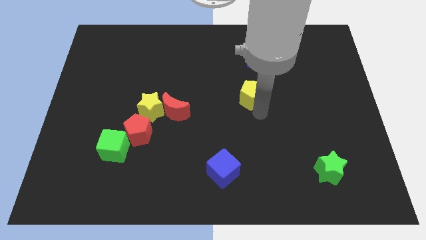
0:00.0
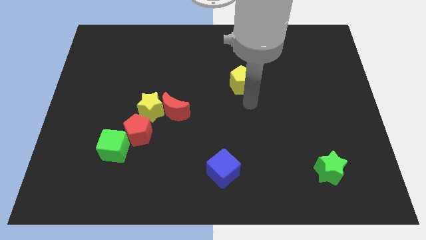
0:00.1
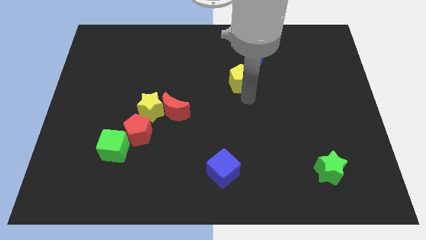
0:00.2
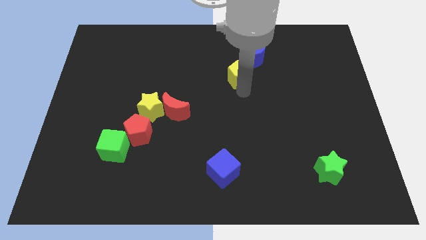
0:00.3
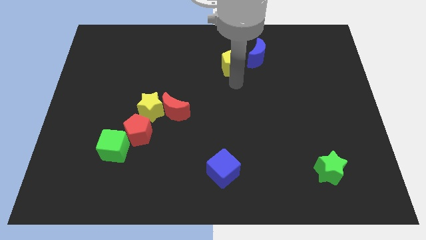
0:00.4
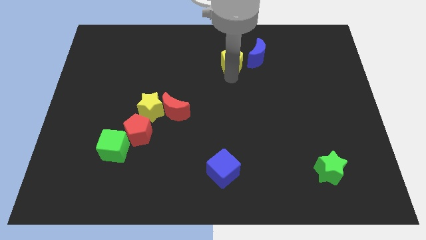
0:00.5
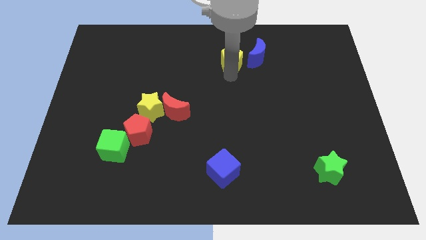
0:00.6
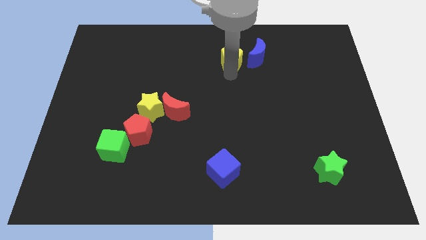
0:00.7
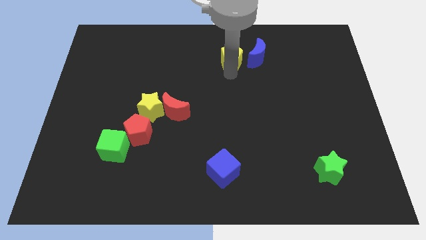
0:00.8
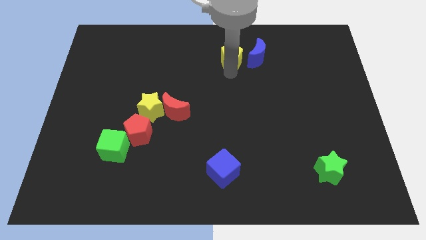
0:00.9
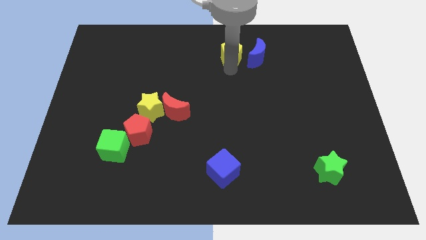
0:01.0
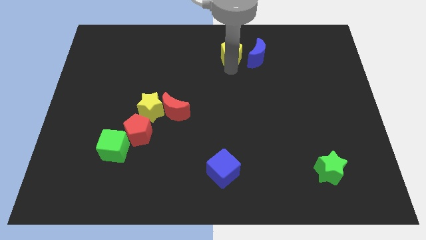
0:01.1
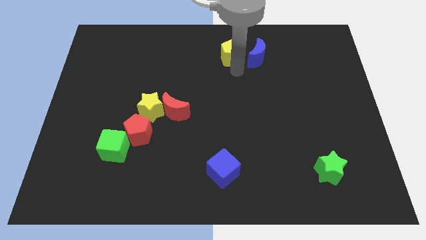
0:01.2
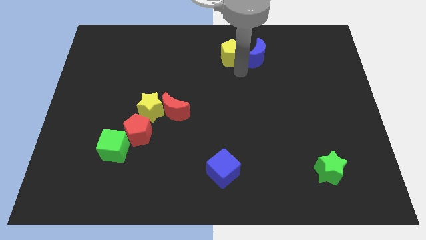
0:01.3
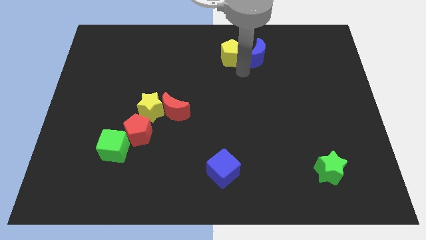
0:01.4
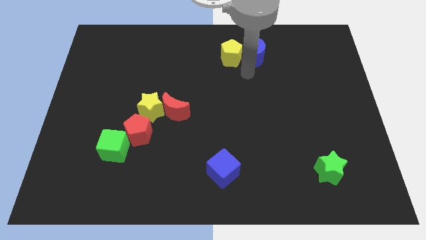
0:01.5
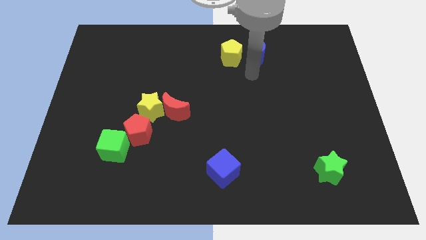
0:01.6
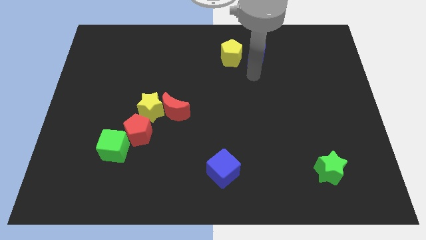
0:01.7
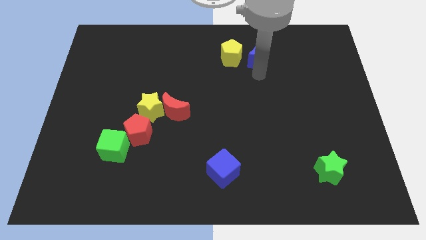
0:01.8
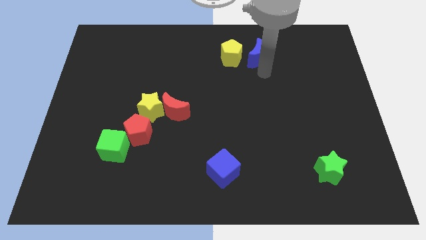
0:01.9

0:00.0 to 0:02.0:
move the yellow pentagon towards the top center of the board

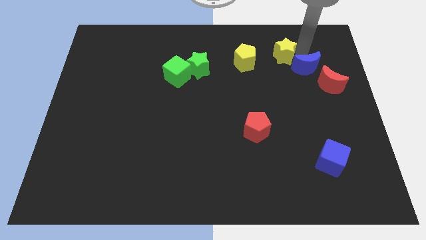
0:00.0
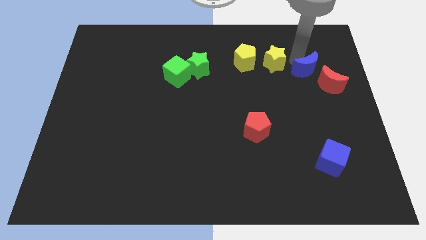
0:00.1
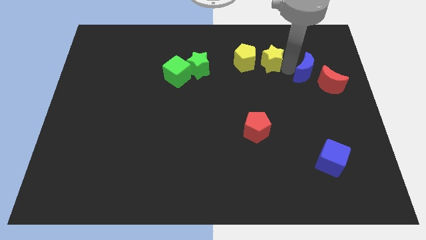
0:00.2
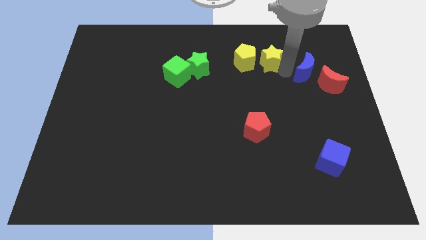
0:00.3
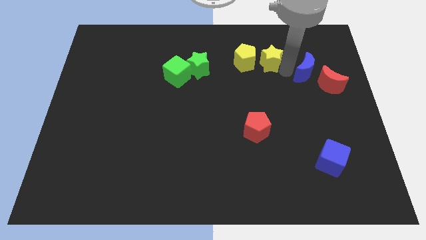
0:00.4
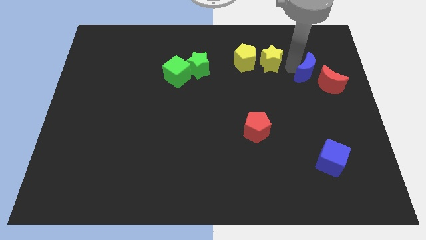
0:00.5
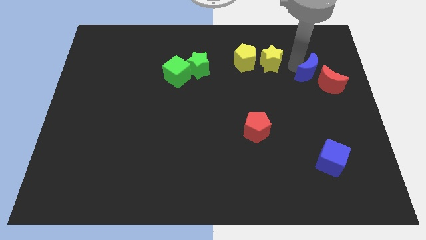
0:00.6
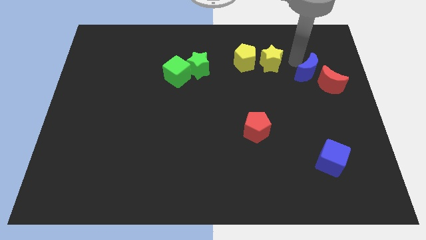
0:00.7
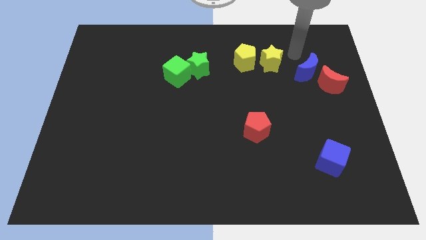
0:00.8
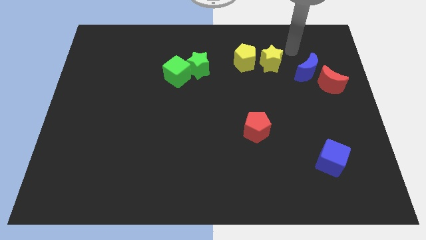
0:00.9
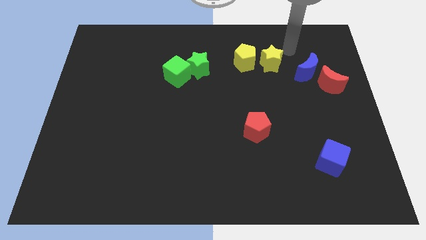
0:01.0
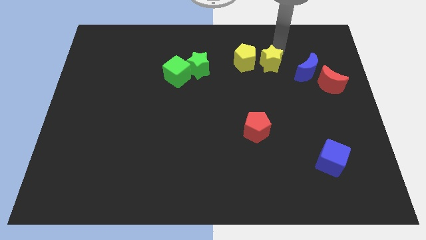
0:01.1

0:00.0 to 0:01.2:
separate yellow star and blue moon

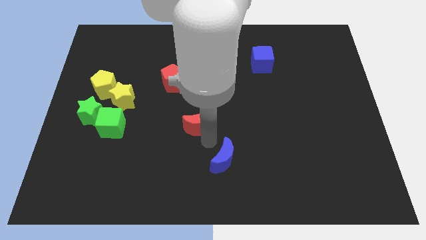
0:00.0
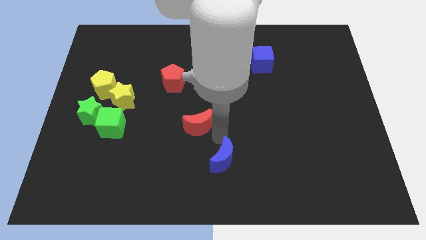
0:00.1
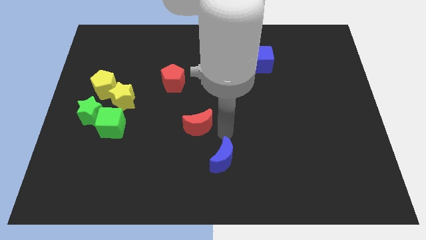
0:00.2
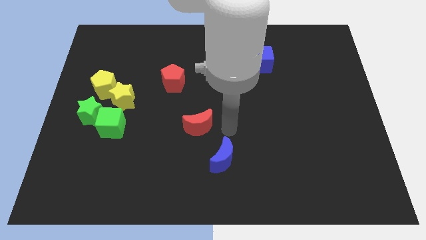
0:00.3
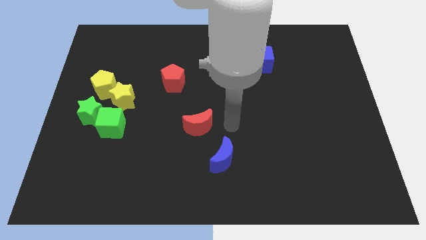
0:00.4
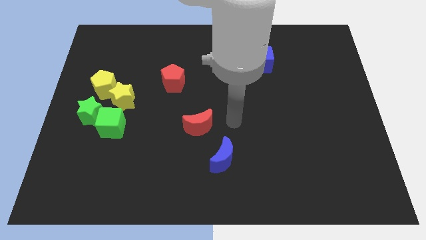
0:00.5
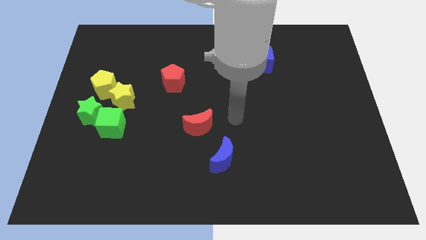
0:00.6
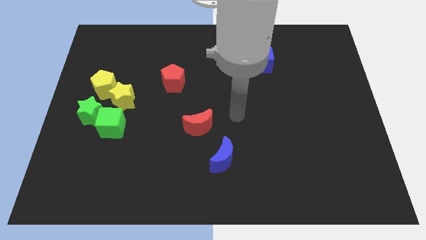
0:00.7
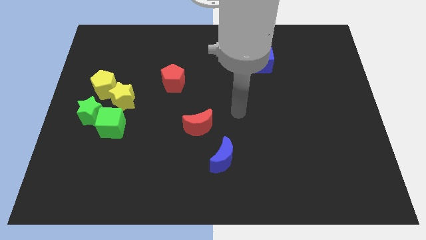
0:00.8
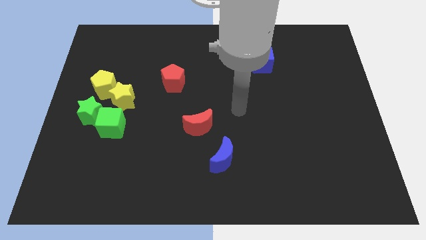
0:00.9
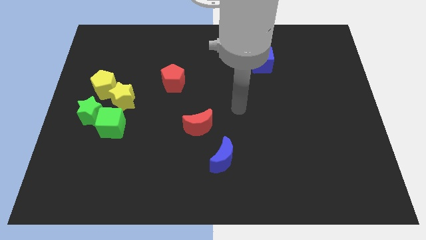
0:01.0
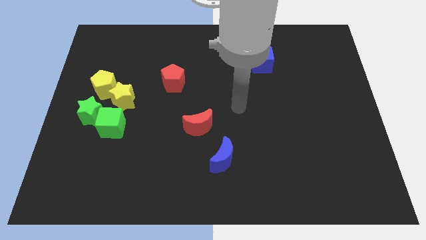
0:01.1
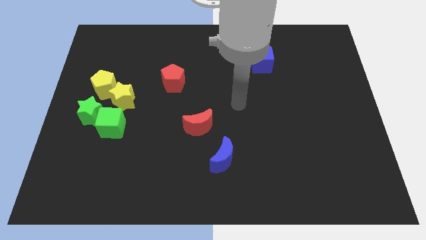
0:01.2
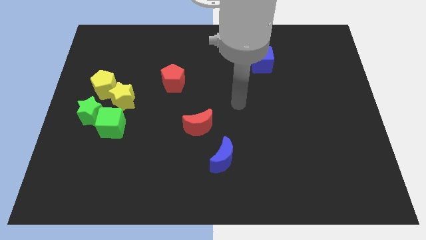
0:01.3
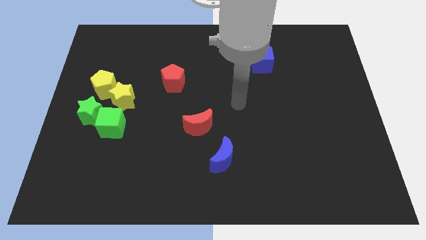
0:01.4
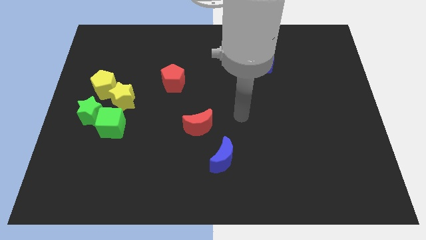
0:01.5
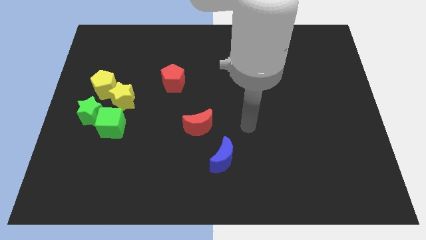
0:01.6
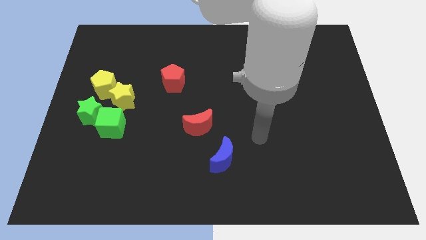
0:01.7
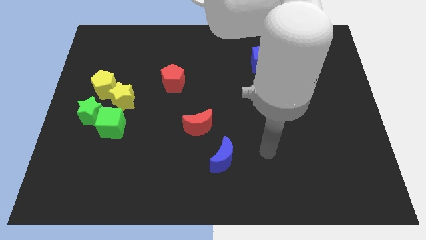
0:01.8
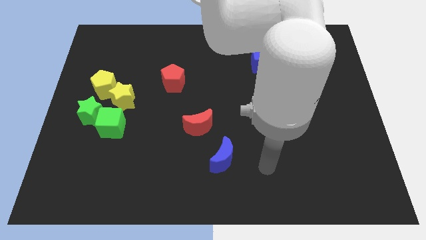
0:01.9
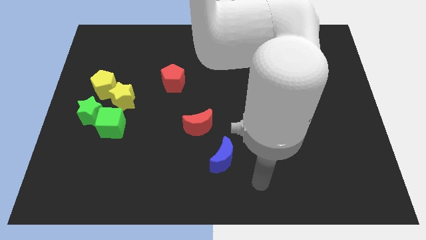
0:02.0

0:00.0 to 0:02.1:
move your arm away from the red moon

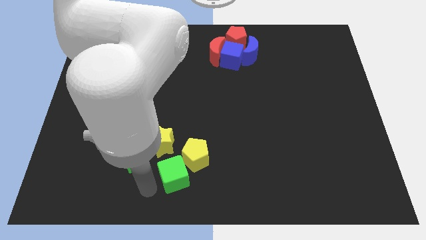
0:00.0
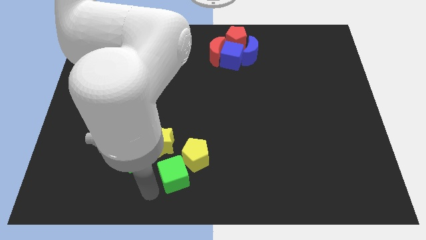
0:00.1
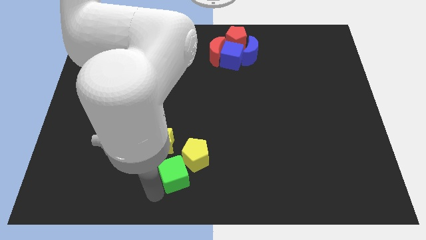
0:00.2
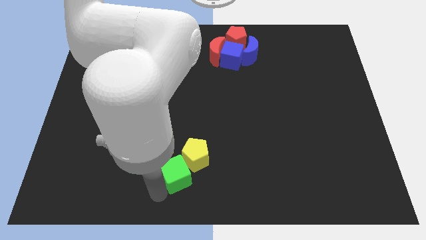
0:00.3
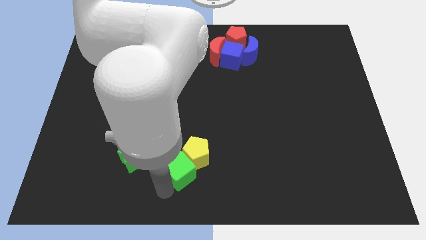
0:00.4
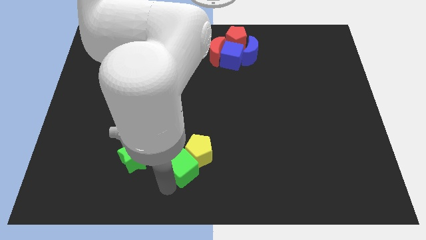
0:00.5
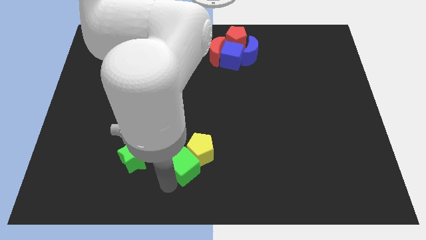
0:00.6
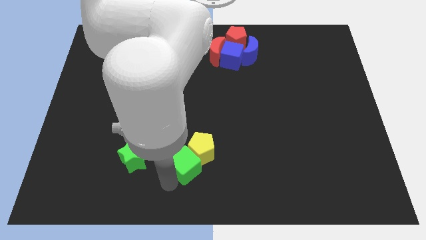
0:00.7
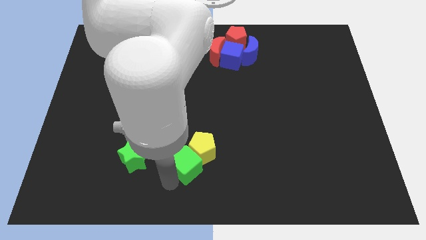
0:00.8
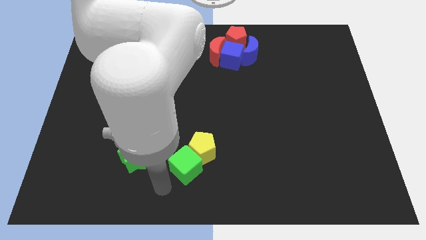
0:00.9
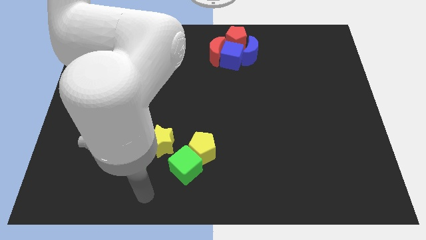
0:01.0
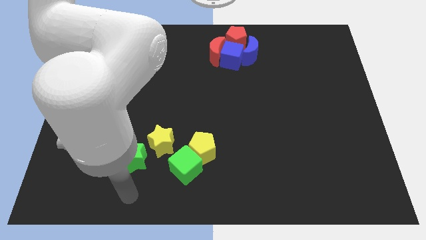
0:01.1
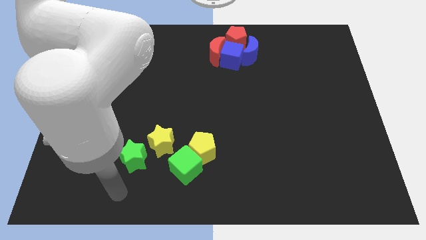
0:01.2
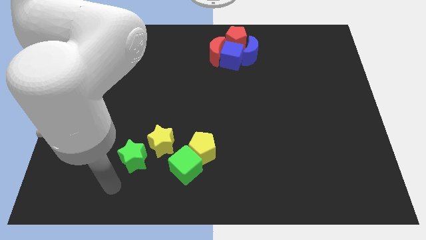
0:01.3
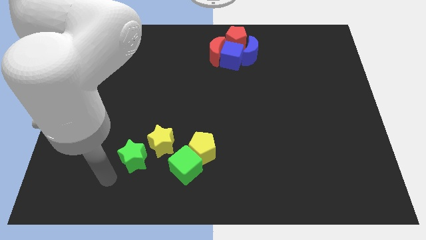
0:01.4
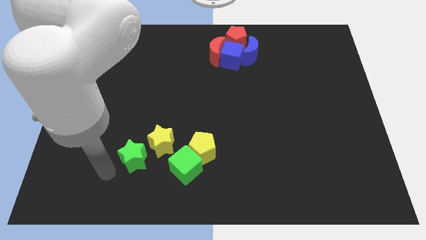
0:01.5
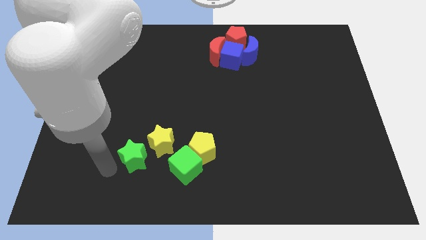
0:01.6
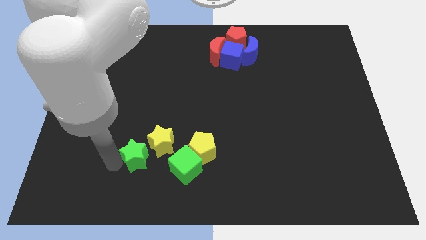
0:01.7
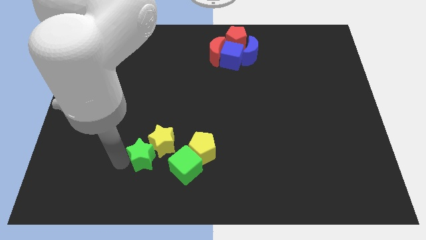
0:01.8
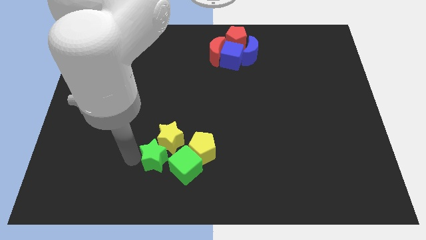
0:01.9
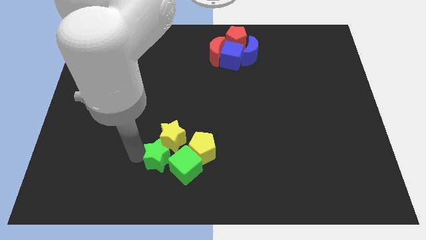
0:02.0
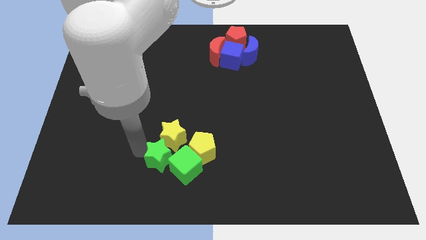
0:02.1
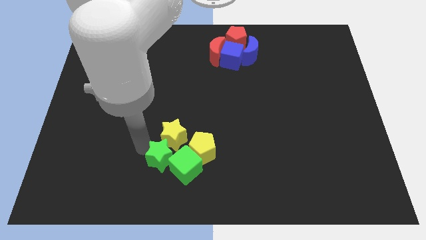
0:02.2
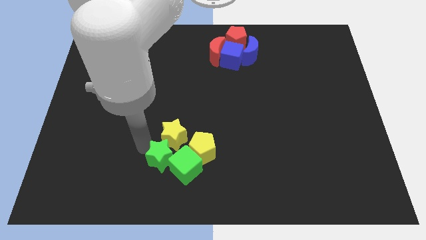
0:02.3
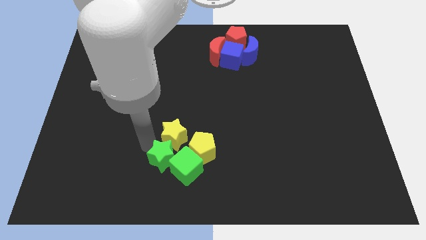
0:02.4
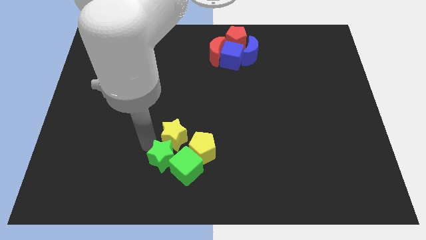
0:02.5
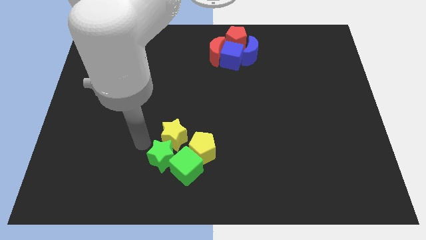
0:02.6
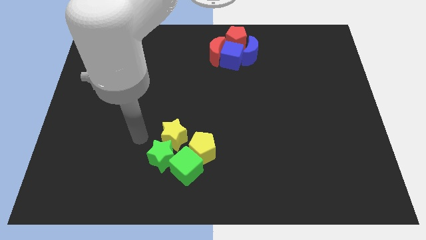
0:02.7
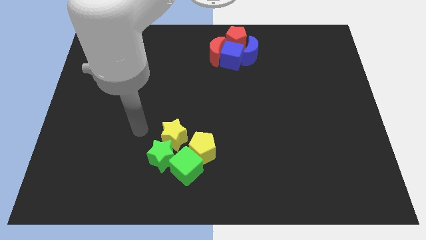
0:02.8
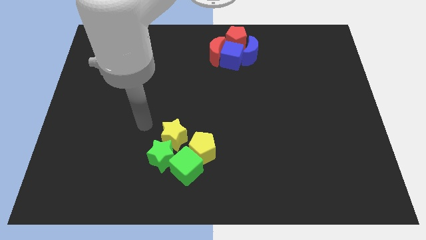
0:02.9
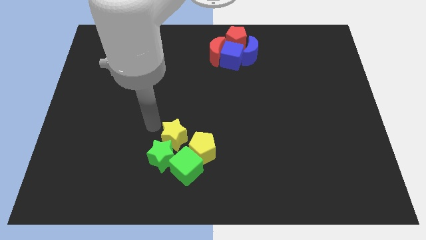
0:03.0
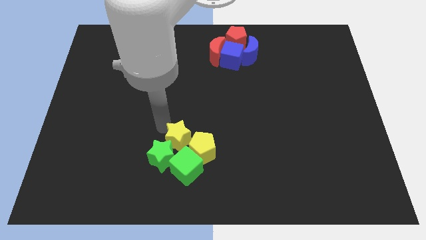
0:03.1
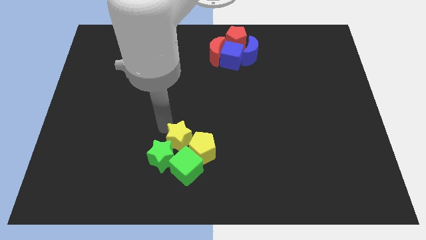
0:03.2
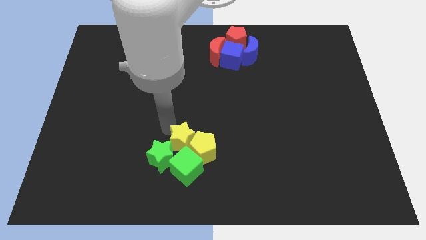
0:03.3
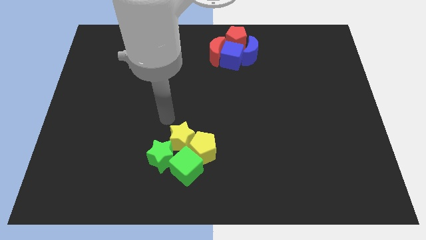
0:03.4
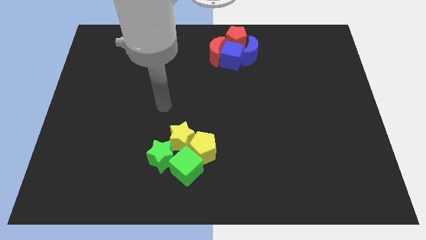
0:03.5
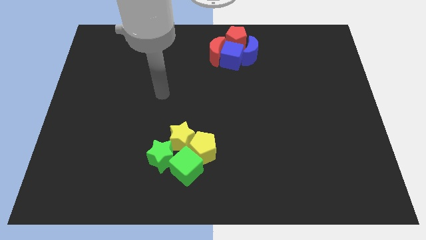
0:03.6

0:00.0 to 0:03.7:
push green blocks in to yellow blocks
